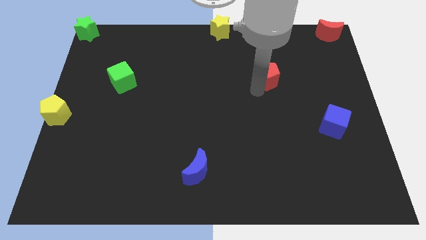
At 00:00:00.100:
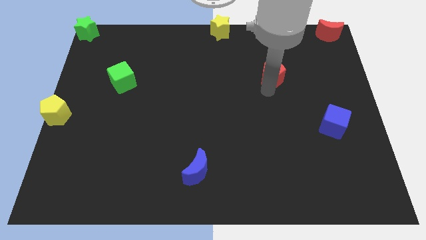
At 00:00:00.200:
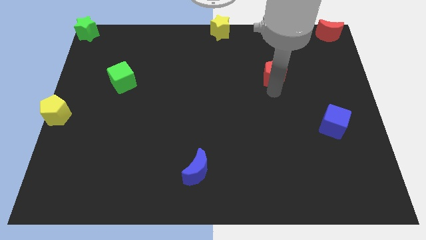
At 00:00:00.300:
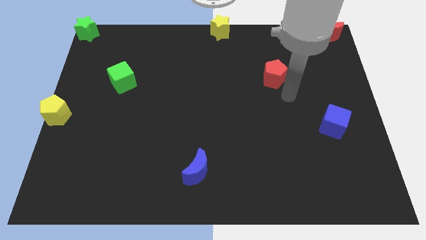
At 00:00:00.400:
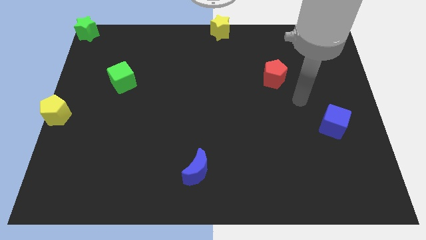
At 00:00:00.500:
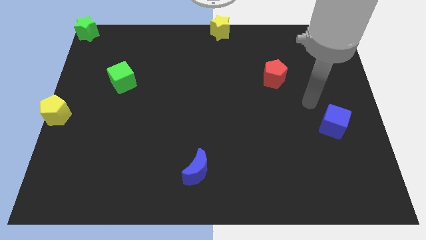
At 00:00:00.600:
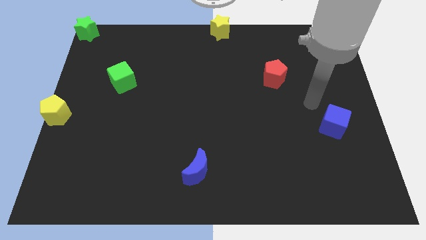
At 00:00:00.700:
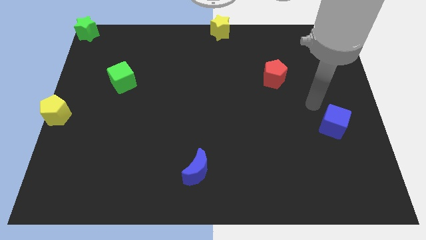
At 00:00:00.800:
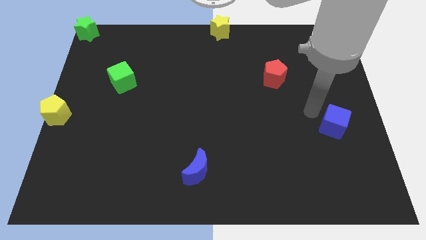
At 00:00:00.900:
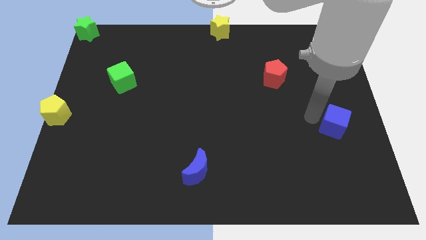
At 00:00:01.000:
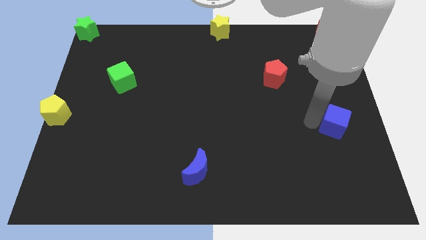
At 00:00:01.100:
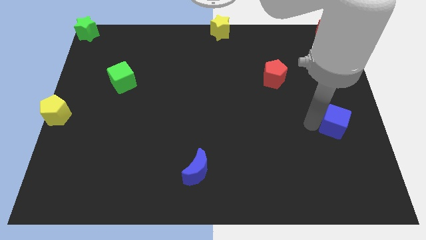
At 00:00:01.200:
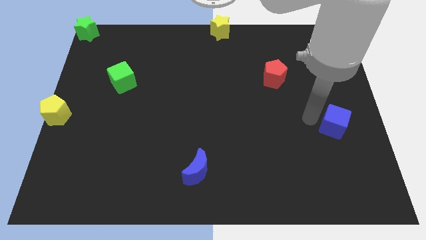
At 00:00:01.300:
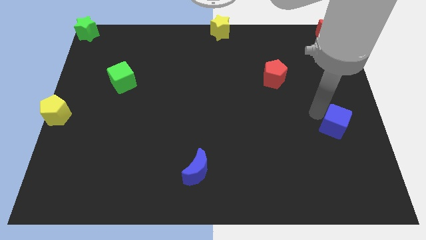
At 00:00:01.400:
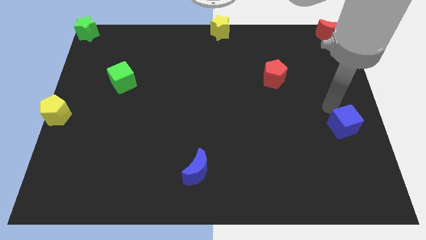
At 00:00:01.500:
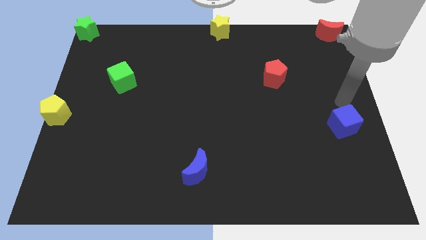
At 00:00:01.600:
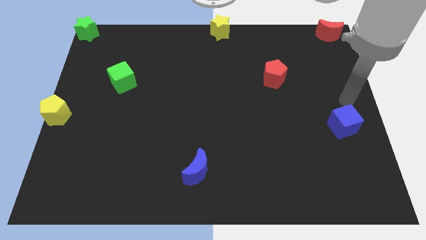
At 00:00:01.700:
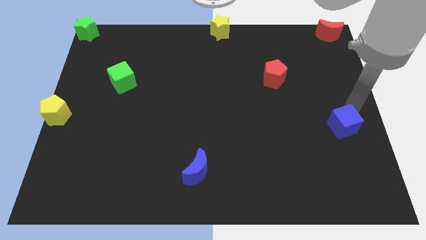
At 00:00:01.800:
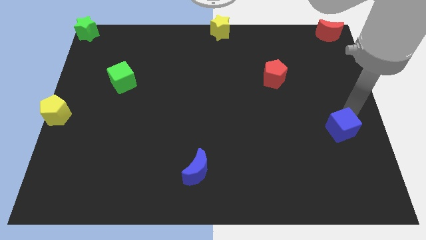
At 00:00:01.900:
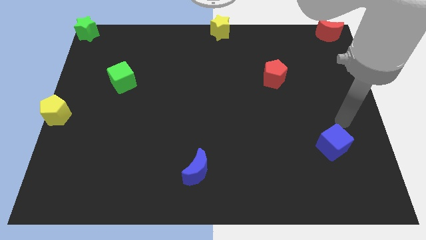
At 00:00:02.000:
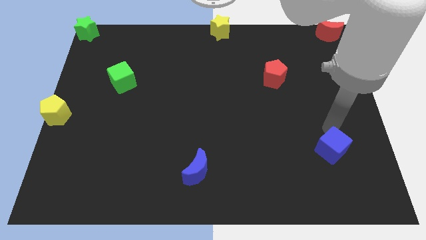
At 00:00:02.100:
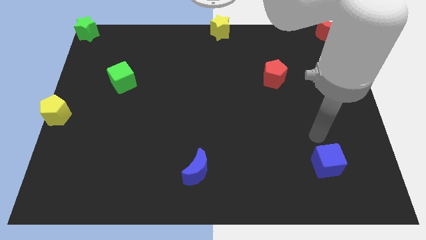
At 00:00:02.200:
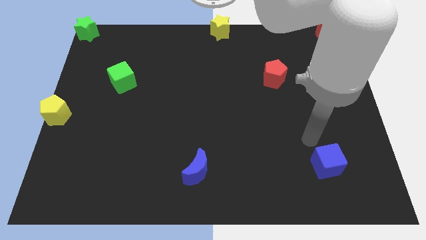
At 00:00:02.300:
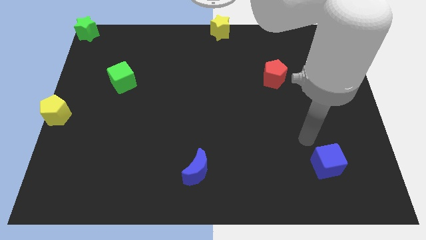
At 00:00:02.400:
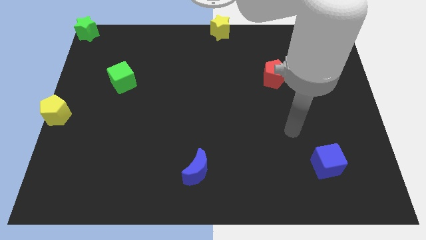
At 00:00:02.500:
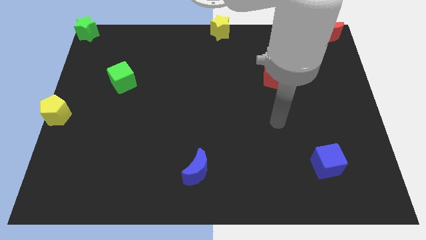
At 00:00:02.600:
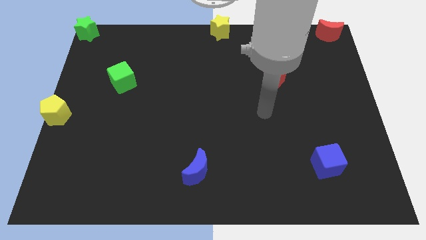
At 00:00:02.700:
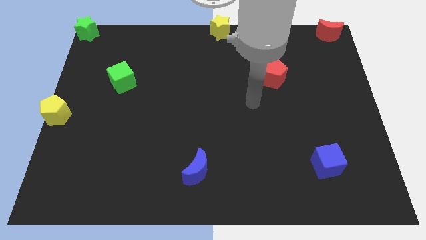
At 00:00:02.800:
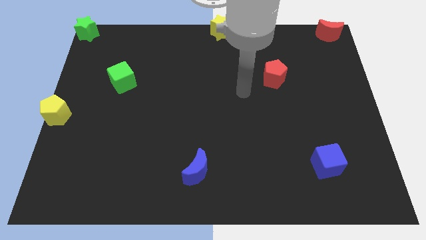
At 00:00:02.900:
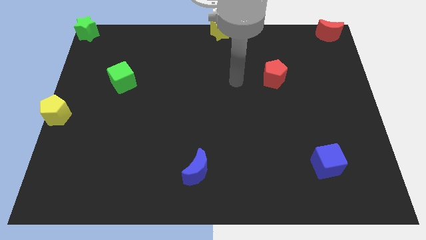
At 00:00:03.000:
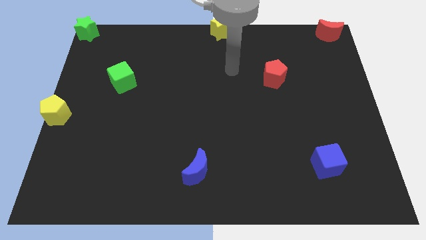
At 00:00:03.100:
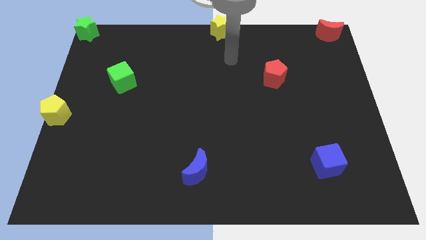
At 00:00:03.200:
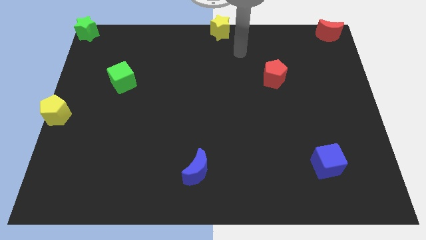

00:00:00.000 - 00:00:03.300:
place blue cube to the right of blue moon

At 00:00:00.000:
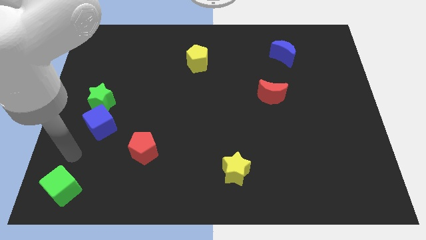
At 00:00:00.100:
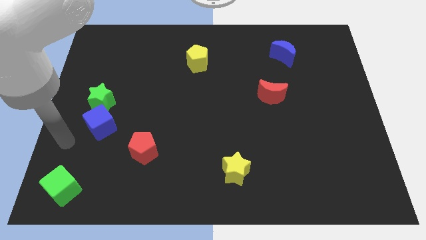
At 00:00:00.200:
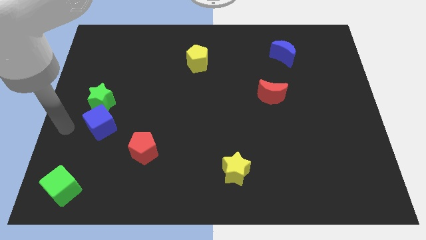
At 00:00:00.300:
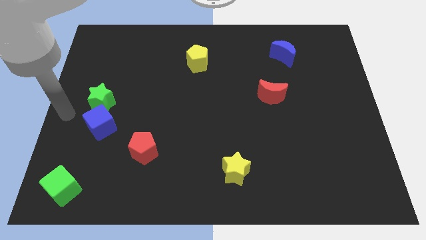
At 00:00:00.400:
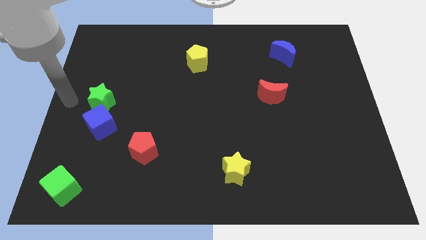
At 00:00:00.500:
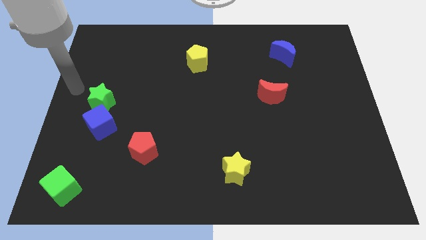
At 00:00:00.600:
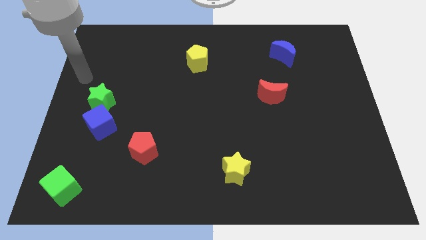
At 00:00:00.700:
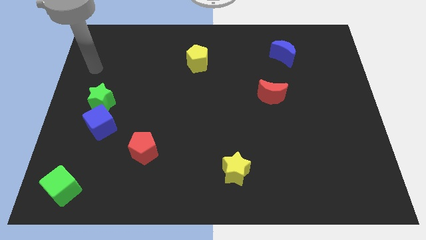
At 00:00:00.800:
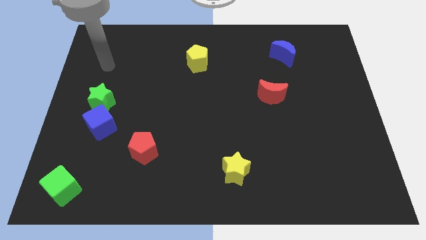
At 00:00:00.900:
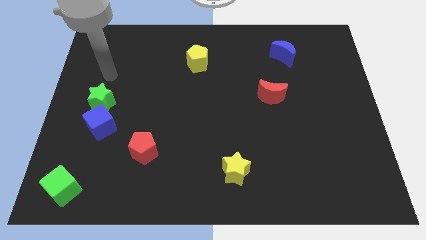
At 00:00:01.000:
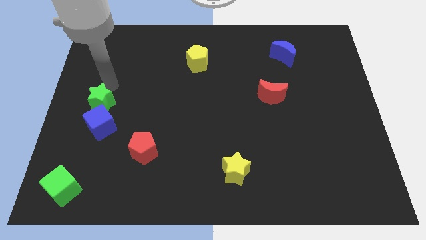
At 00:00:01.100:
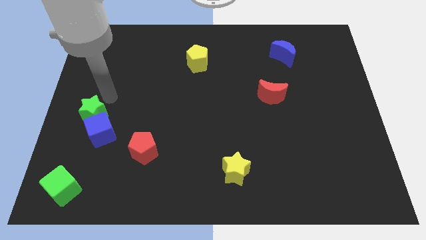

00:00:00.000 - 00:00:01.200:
move the green star into the blue cube

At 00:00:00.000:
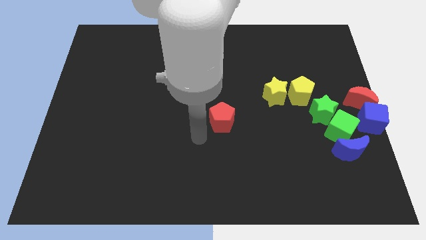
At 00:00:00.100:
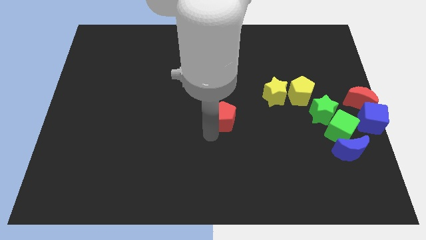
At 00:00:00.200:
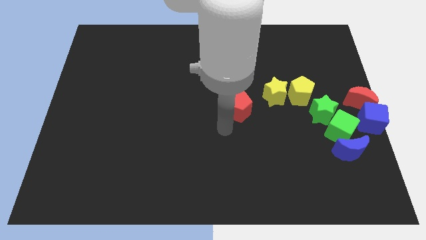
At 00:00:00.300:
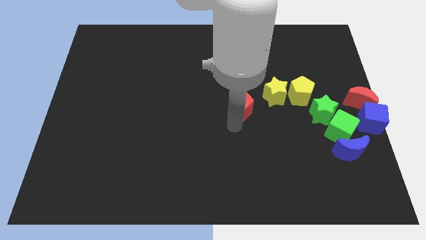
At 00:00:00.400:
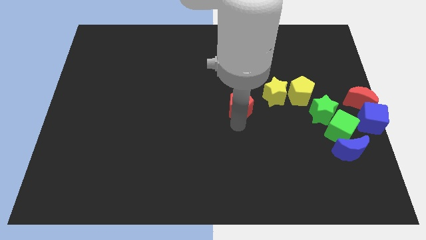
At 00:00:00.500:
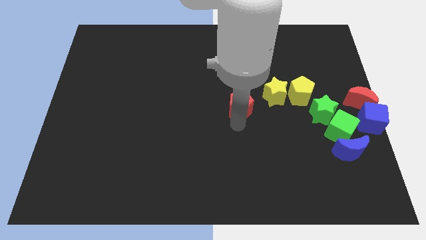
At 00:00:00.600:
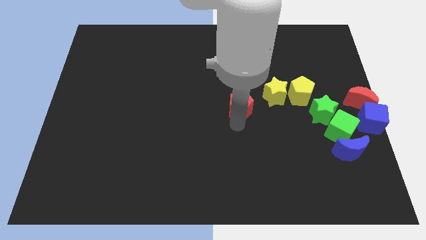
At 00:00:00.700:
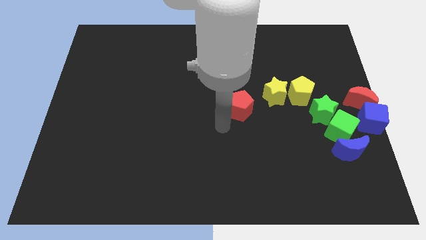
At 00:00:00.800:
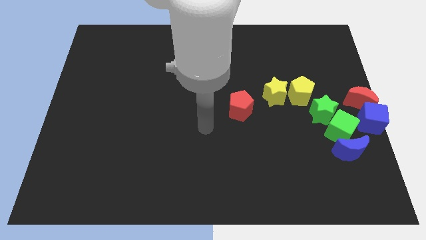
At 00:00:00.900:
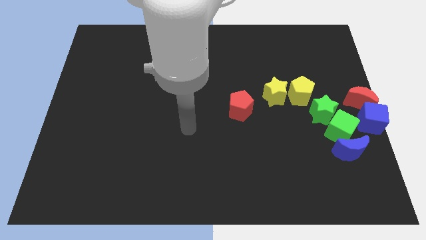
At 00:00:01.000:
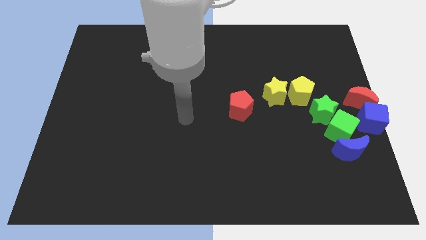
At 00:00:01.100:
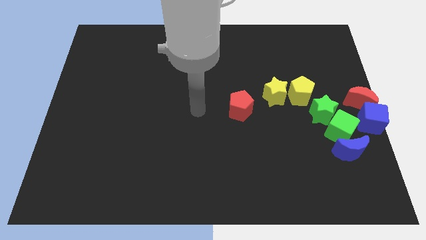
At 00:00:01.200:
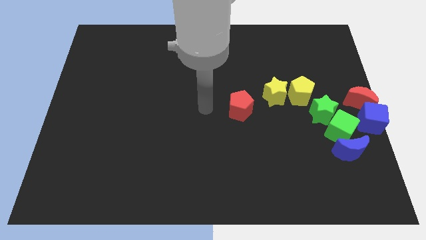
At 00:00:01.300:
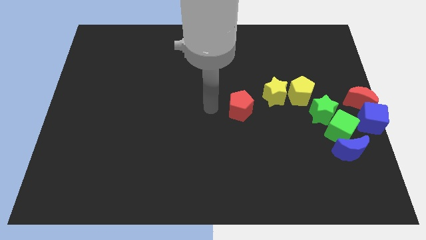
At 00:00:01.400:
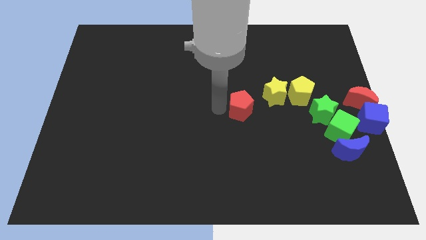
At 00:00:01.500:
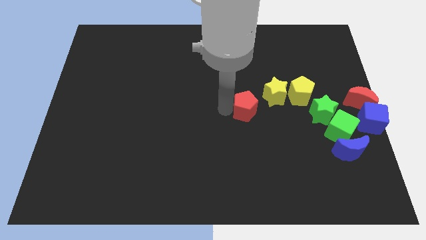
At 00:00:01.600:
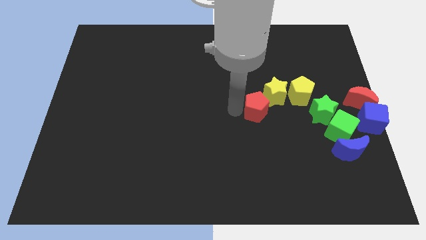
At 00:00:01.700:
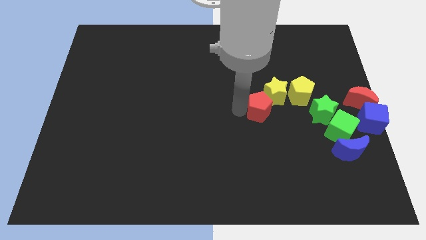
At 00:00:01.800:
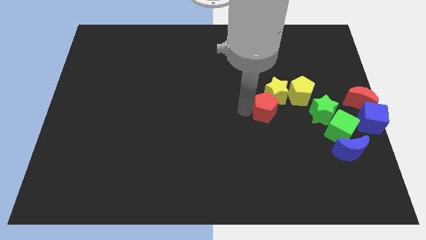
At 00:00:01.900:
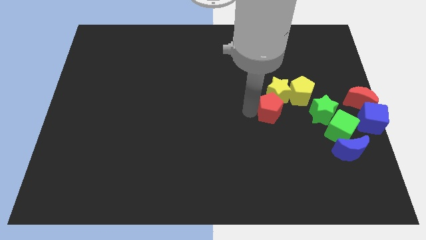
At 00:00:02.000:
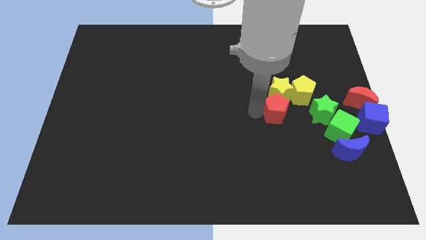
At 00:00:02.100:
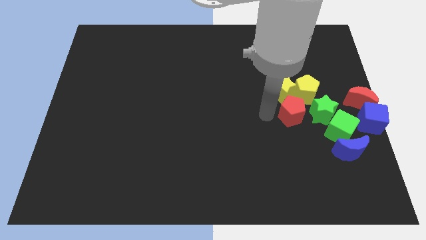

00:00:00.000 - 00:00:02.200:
push red pentagon into yellow star

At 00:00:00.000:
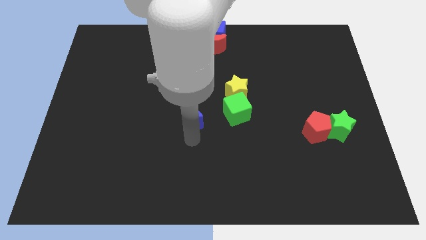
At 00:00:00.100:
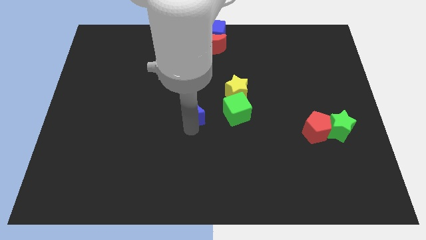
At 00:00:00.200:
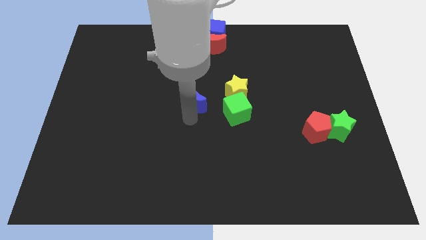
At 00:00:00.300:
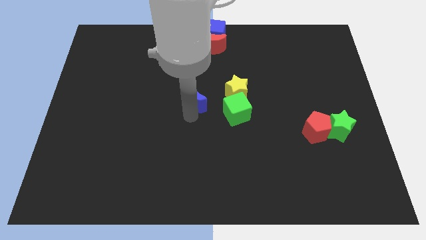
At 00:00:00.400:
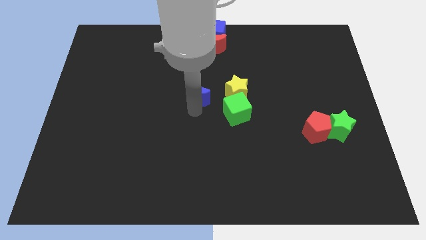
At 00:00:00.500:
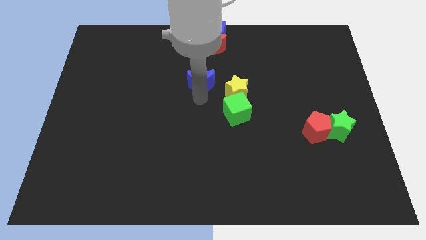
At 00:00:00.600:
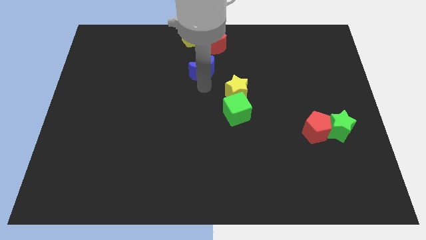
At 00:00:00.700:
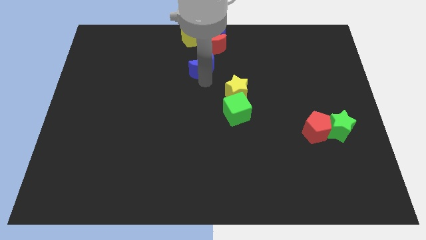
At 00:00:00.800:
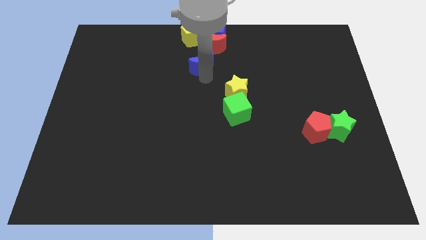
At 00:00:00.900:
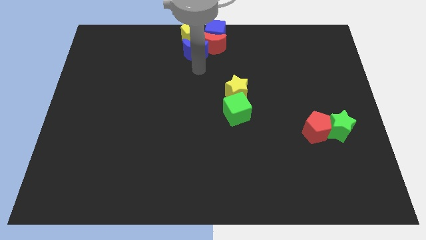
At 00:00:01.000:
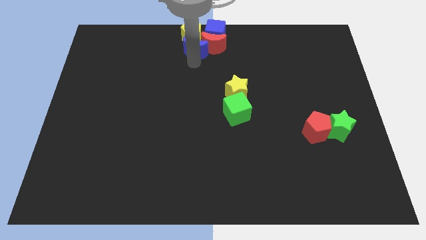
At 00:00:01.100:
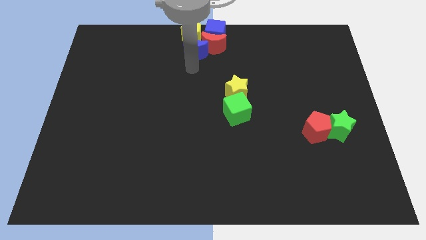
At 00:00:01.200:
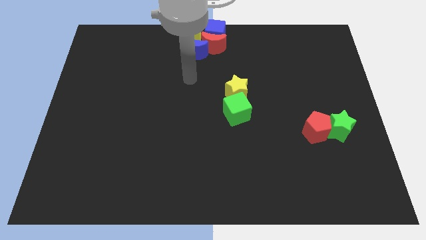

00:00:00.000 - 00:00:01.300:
place the blue moon below the yellow pentagon

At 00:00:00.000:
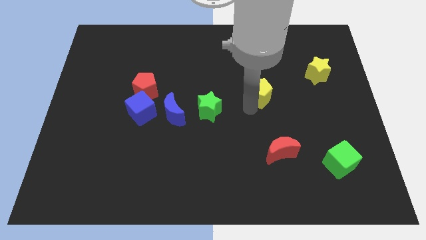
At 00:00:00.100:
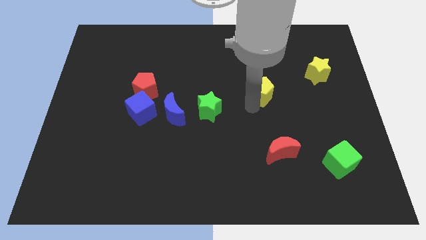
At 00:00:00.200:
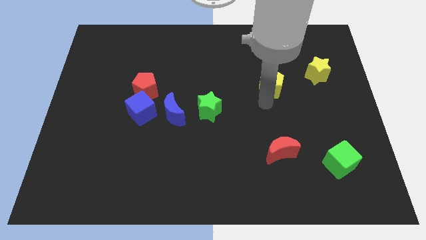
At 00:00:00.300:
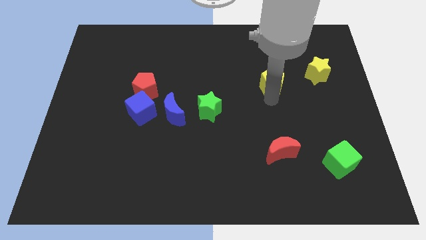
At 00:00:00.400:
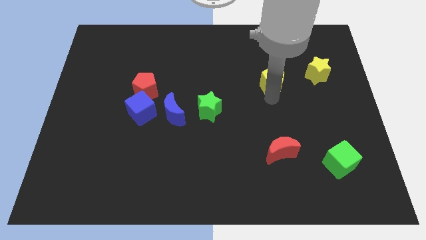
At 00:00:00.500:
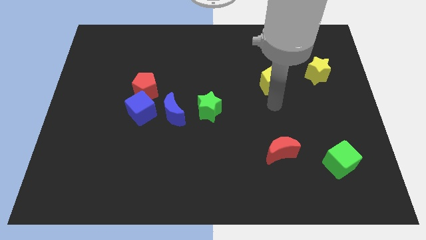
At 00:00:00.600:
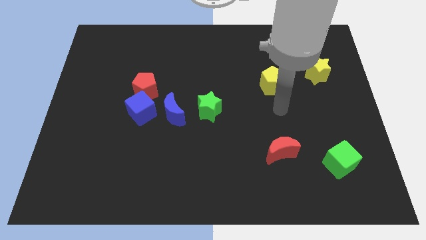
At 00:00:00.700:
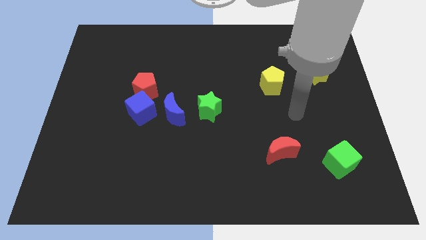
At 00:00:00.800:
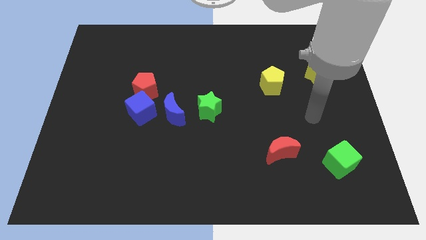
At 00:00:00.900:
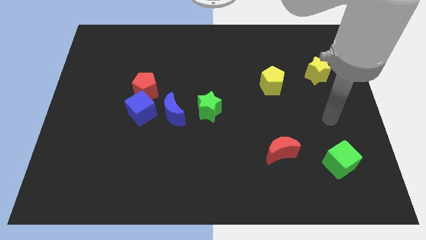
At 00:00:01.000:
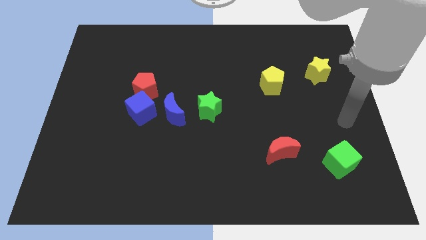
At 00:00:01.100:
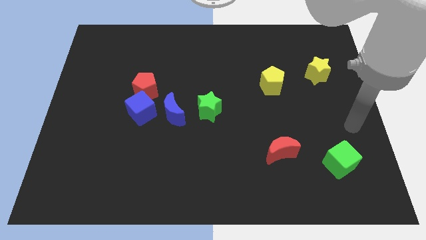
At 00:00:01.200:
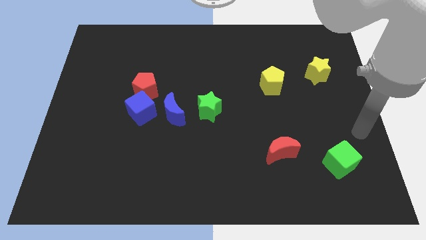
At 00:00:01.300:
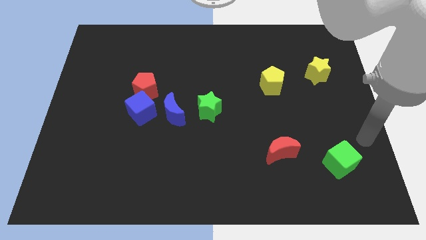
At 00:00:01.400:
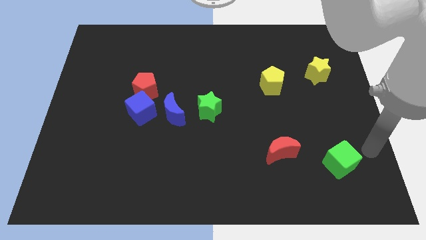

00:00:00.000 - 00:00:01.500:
push yellow pentagon parallel to yellow star
